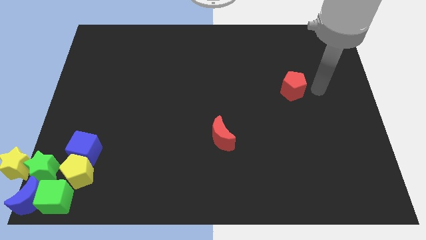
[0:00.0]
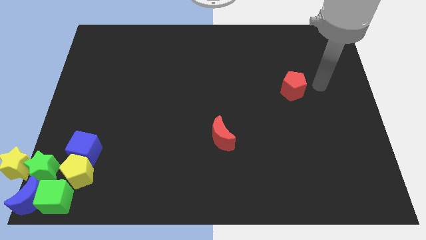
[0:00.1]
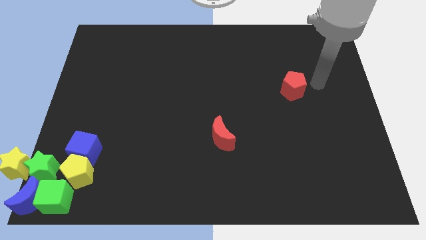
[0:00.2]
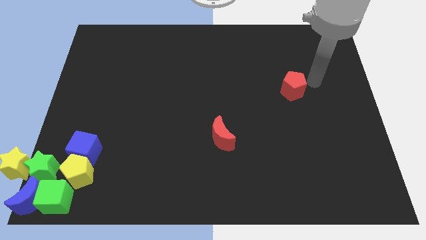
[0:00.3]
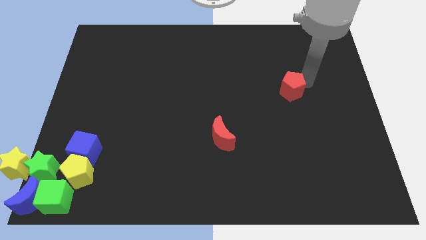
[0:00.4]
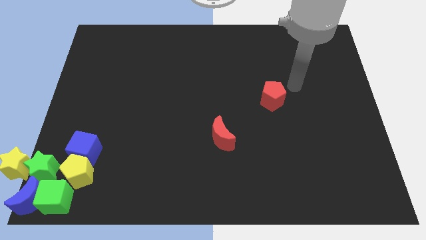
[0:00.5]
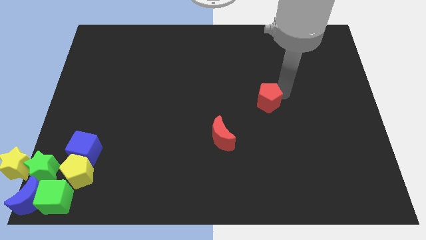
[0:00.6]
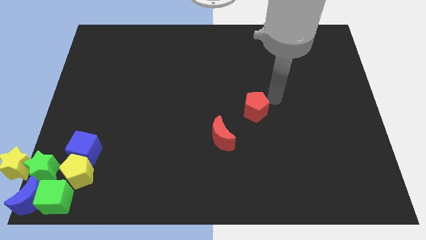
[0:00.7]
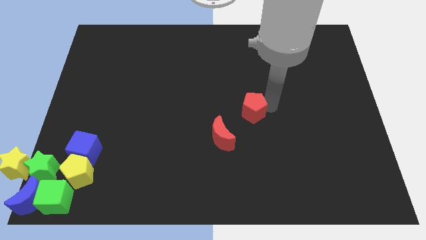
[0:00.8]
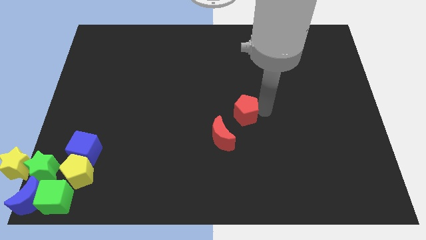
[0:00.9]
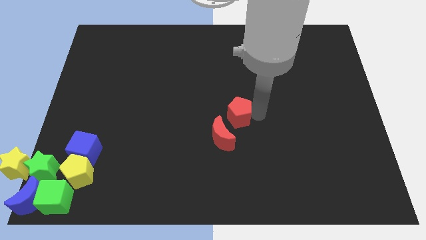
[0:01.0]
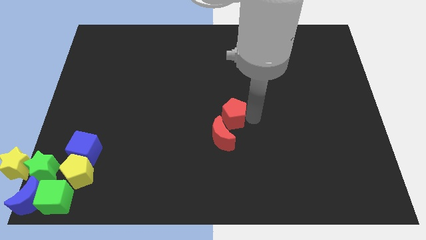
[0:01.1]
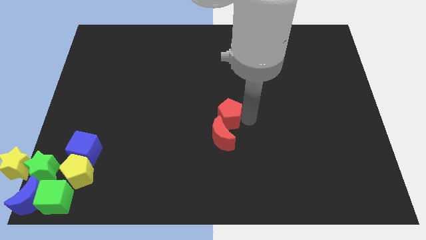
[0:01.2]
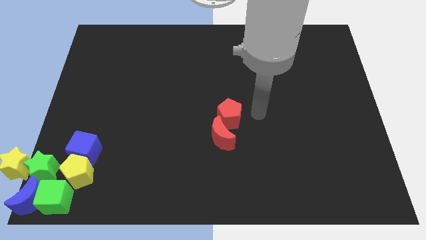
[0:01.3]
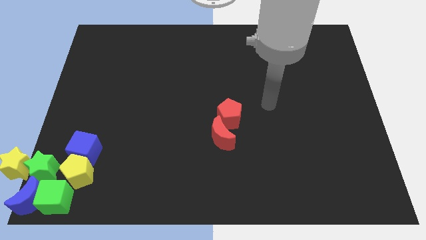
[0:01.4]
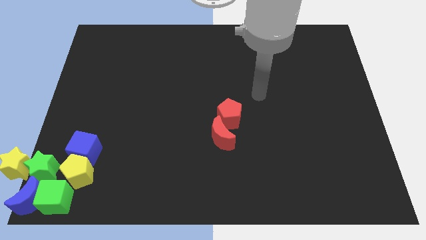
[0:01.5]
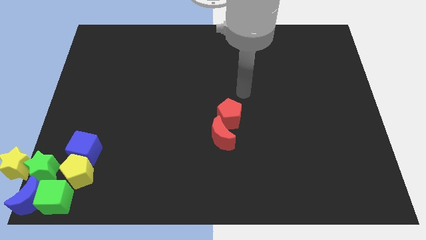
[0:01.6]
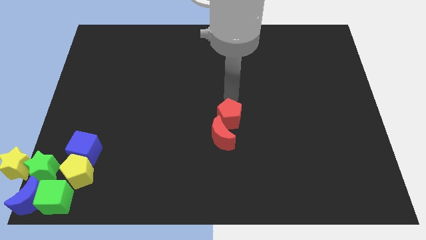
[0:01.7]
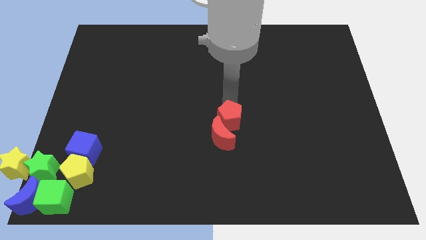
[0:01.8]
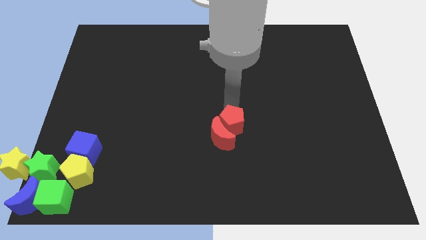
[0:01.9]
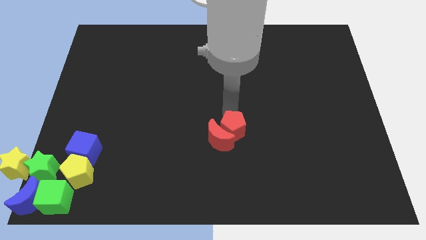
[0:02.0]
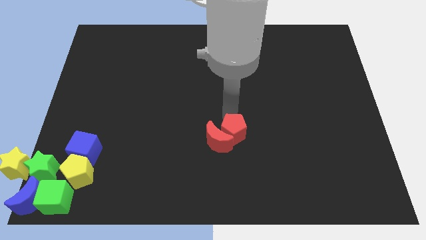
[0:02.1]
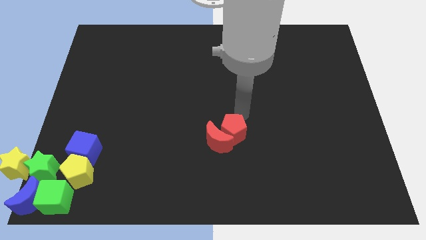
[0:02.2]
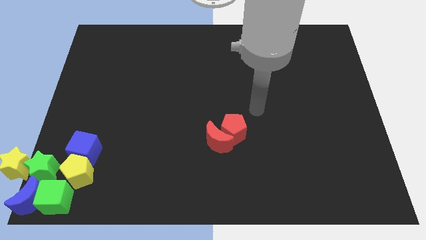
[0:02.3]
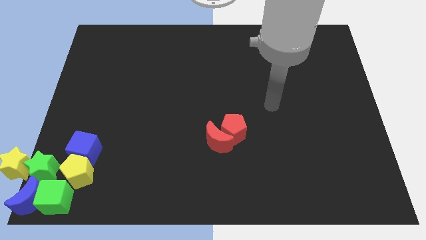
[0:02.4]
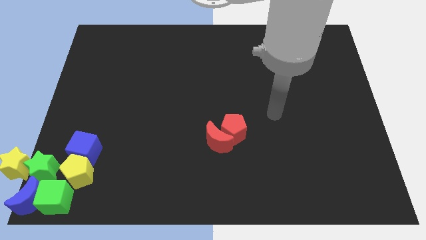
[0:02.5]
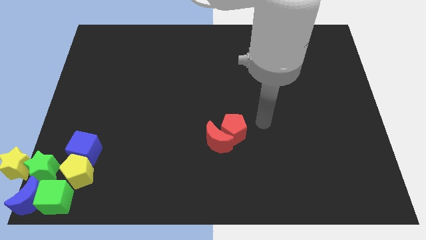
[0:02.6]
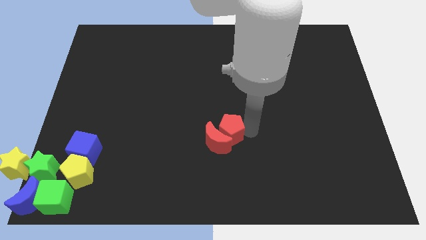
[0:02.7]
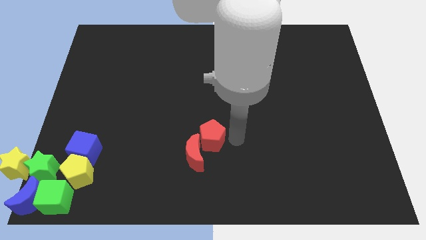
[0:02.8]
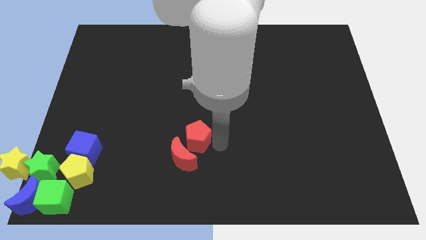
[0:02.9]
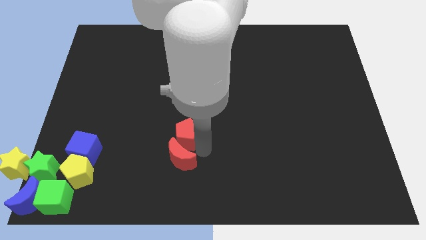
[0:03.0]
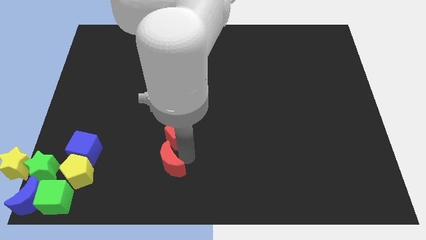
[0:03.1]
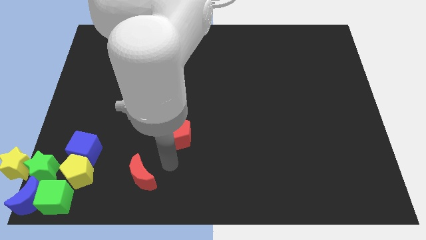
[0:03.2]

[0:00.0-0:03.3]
drag both the red blocks to the right side of the blue cube

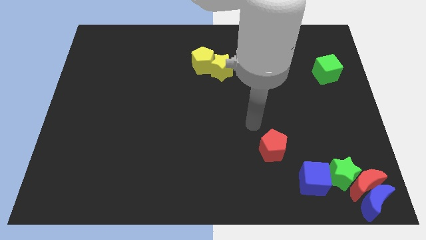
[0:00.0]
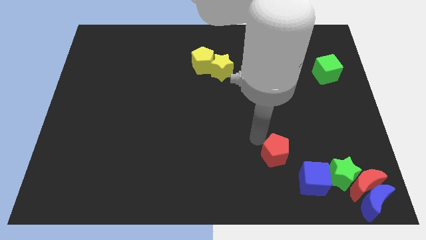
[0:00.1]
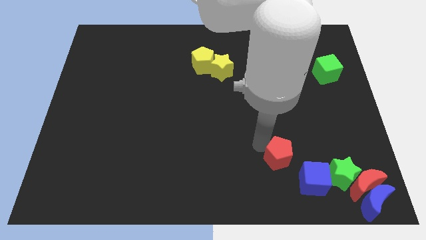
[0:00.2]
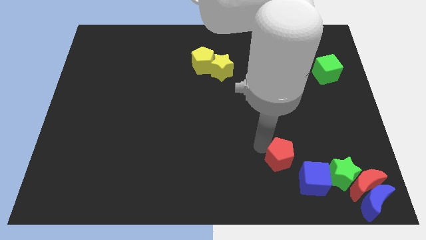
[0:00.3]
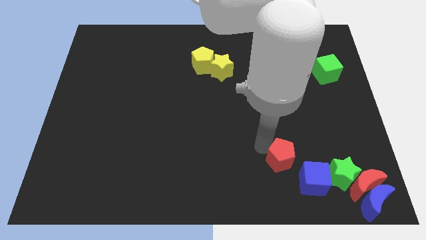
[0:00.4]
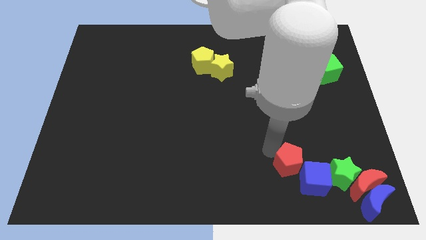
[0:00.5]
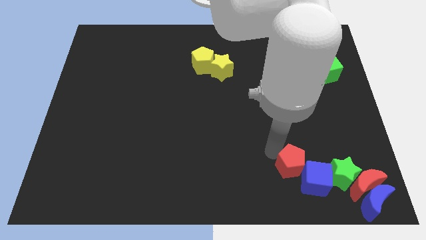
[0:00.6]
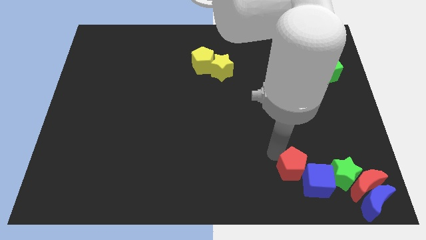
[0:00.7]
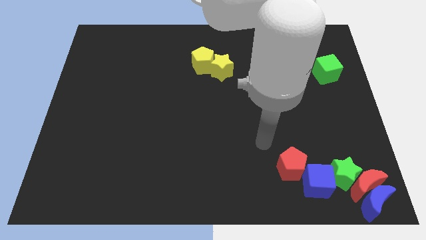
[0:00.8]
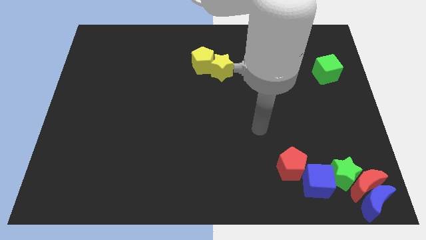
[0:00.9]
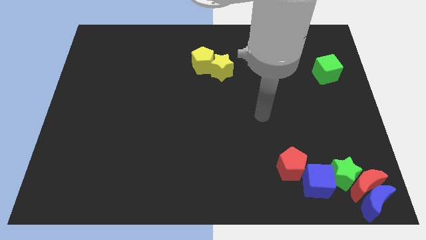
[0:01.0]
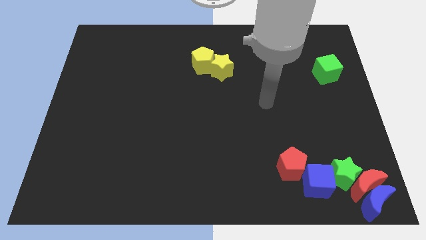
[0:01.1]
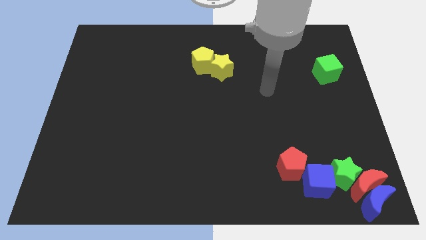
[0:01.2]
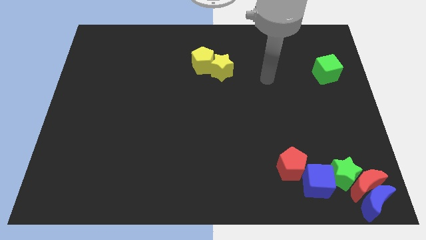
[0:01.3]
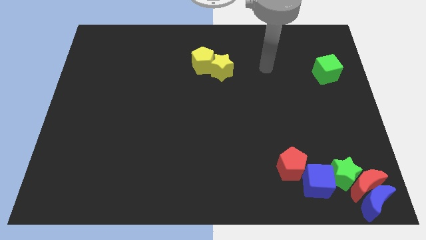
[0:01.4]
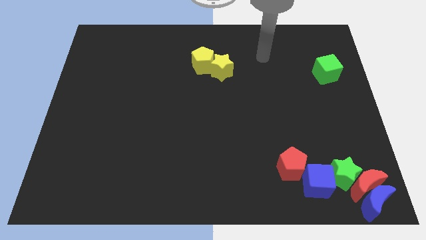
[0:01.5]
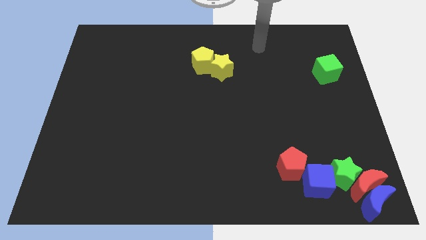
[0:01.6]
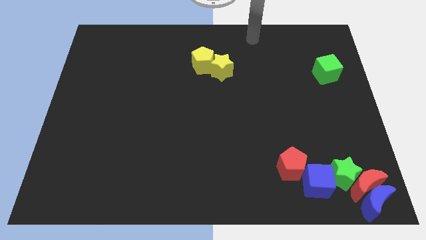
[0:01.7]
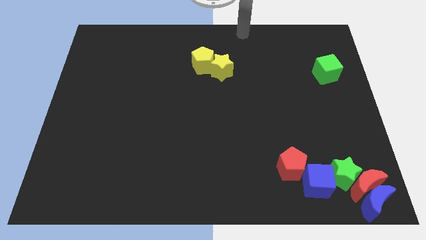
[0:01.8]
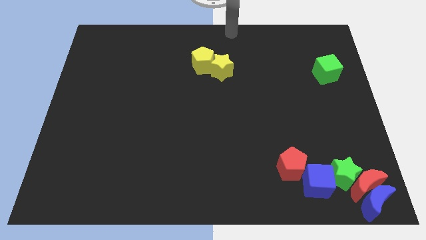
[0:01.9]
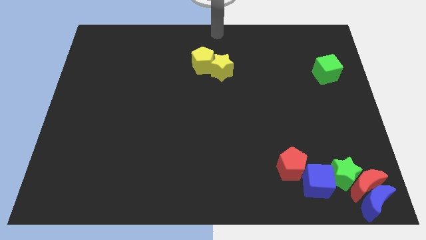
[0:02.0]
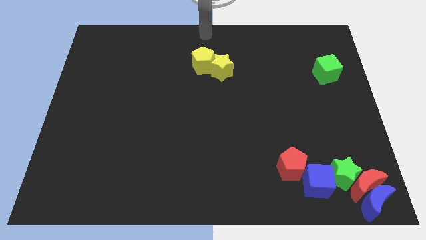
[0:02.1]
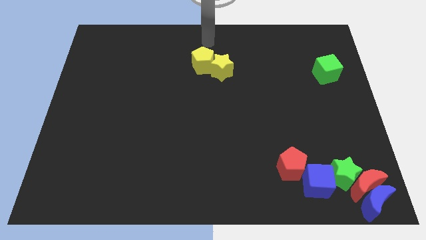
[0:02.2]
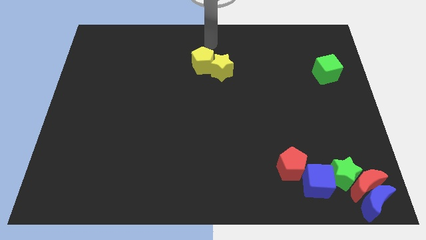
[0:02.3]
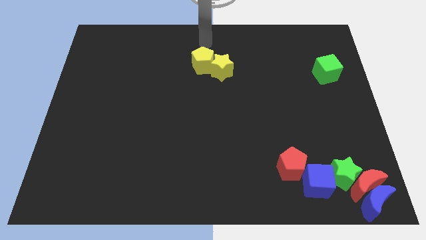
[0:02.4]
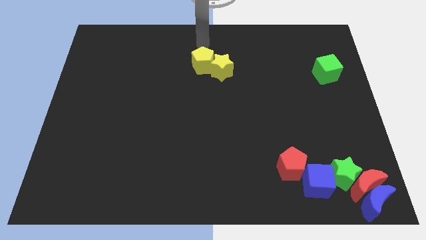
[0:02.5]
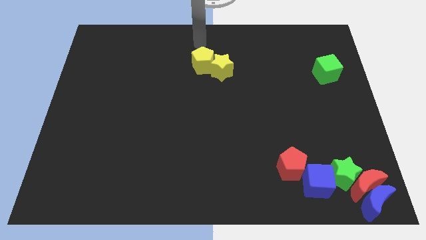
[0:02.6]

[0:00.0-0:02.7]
move the red pentagon into the blue cube

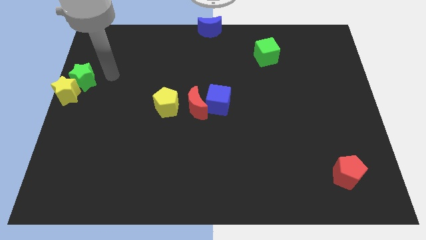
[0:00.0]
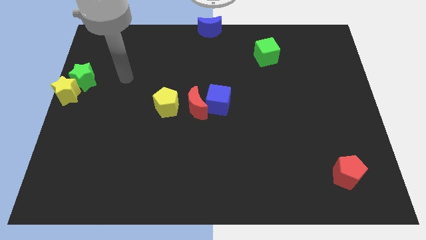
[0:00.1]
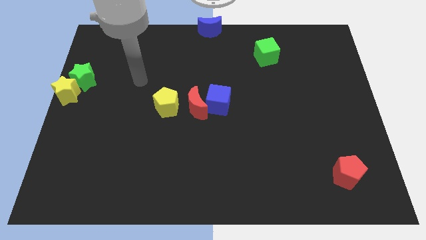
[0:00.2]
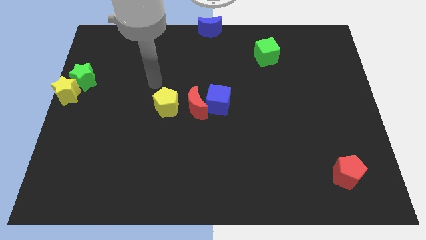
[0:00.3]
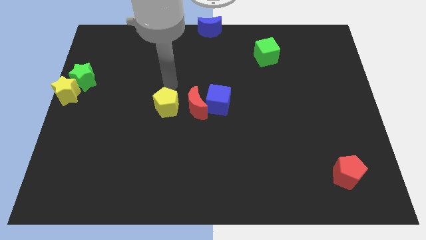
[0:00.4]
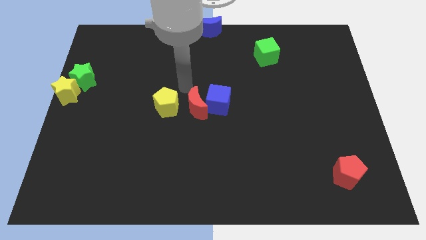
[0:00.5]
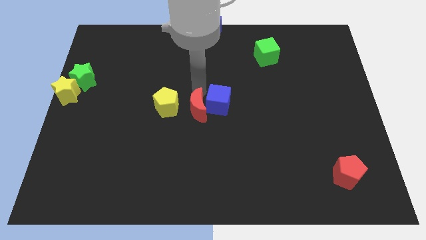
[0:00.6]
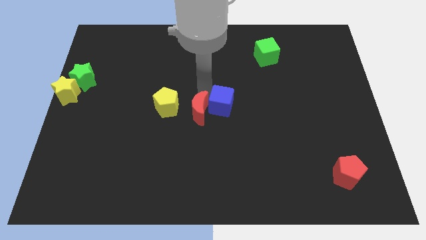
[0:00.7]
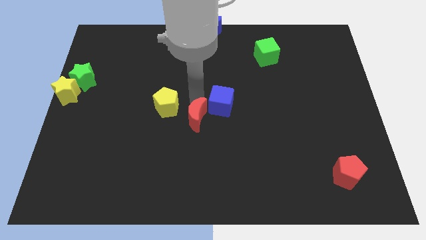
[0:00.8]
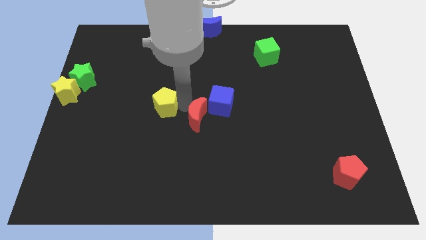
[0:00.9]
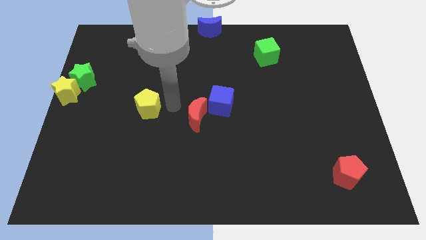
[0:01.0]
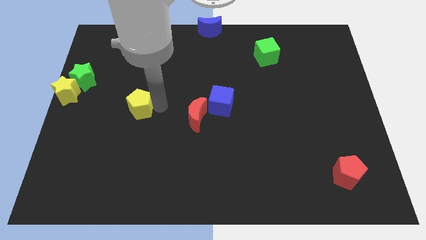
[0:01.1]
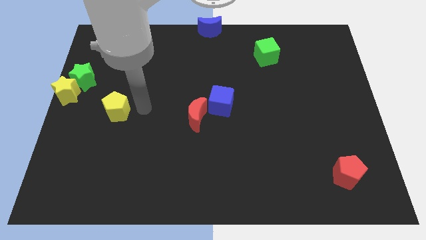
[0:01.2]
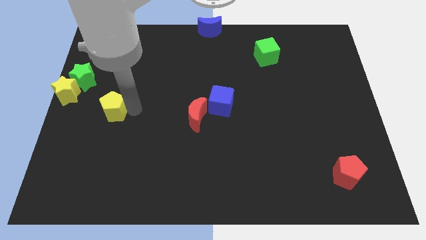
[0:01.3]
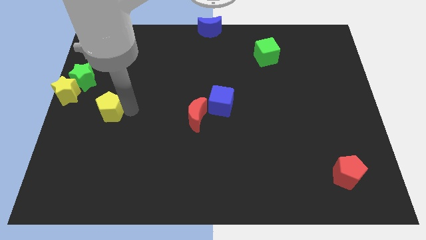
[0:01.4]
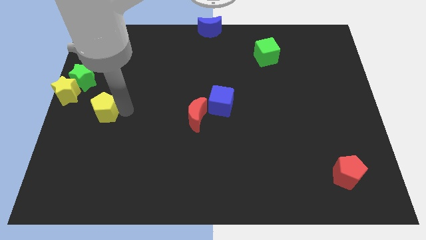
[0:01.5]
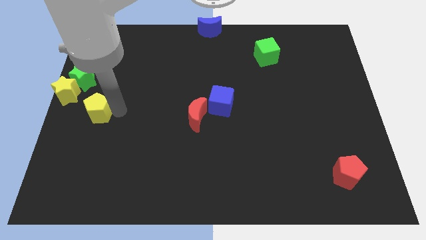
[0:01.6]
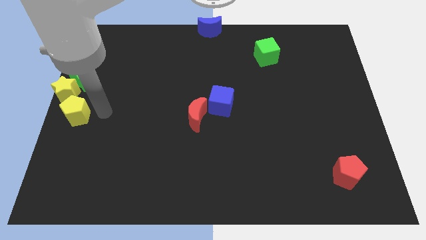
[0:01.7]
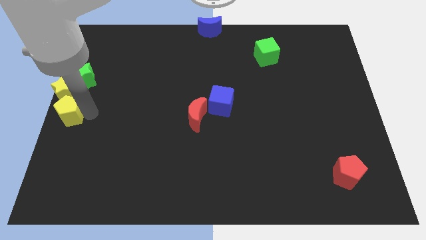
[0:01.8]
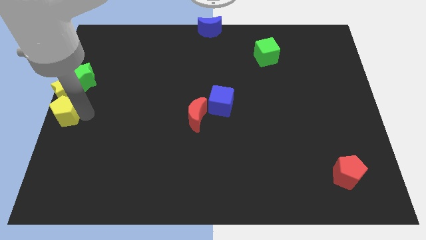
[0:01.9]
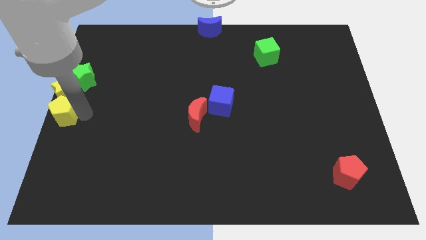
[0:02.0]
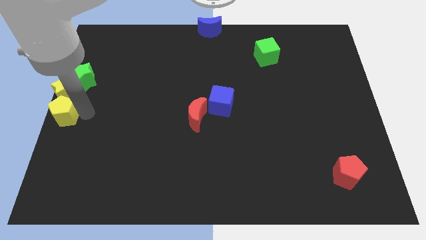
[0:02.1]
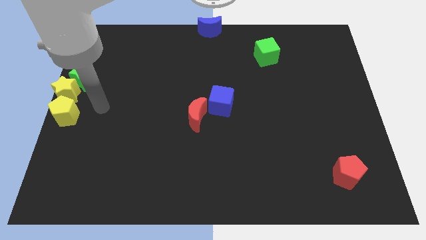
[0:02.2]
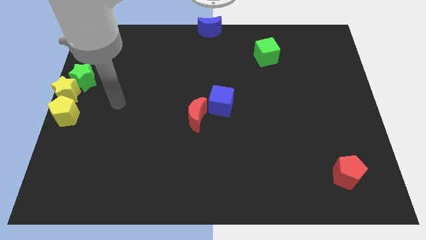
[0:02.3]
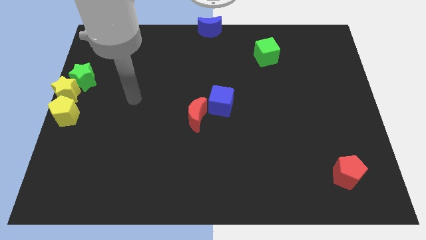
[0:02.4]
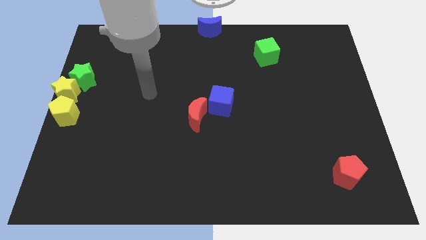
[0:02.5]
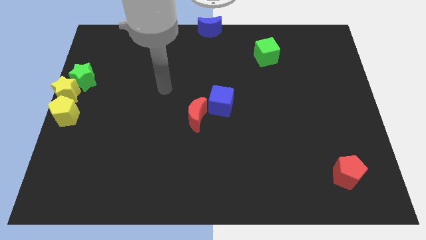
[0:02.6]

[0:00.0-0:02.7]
place the yellow pentagon below the yellow star

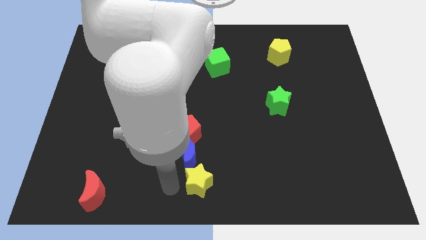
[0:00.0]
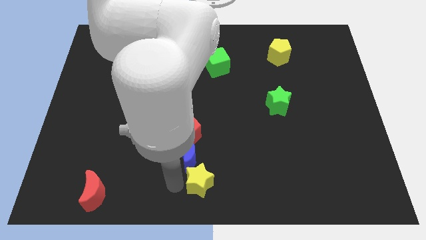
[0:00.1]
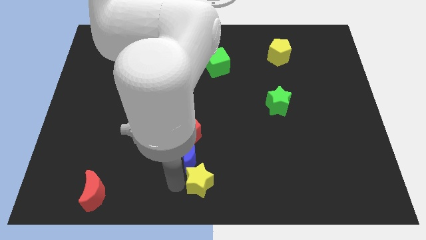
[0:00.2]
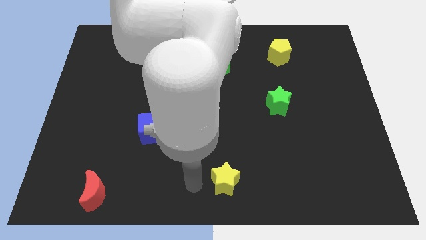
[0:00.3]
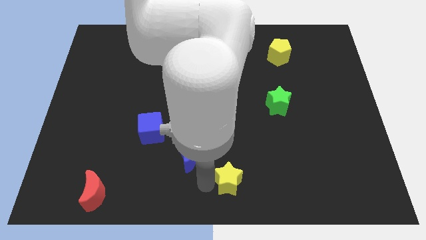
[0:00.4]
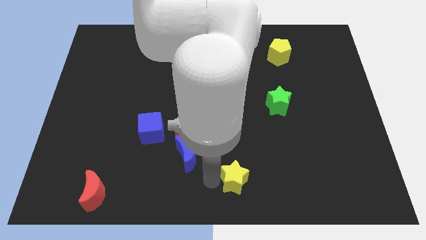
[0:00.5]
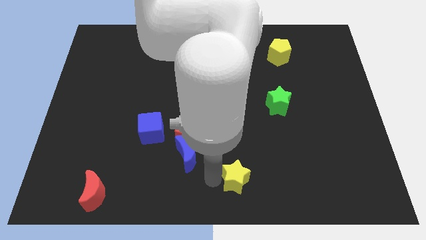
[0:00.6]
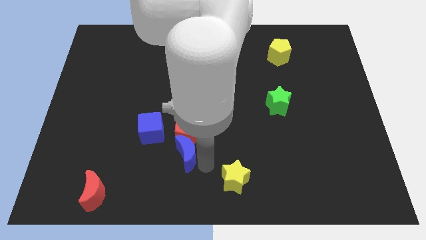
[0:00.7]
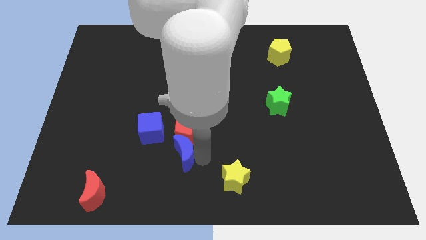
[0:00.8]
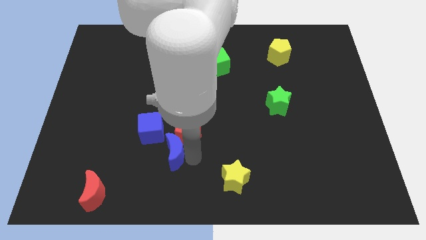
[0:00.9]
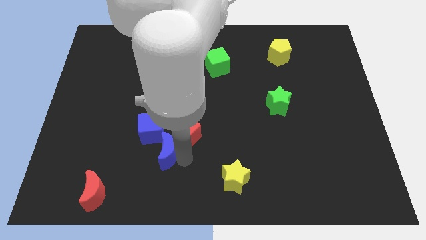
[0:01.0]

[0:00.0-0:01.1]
push yellow star towards bottom center
